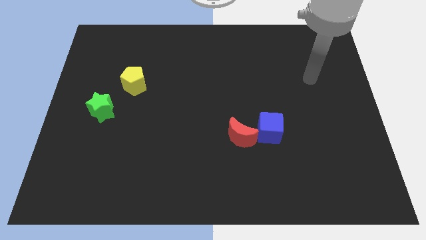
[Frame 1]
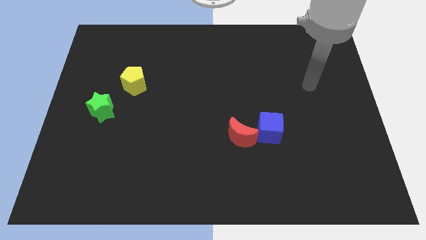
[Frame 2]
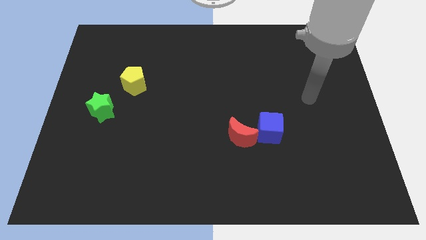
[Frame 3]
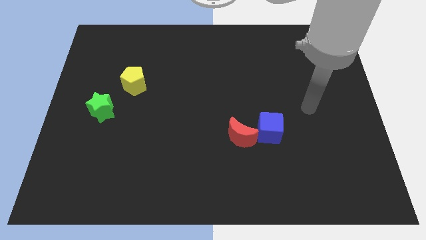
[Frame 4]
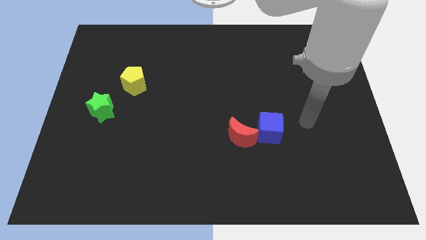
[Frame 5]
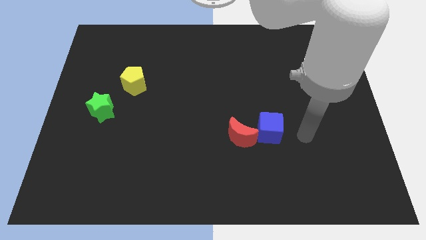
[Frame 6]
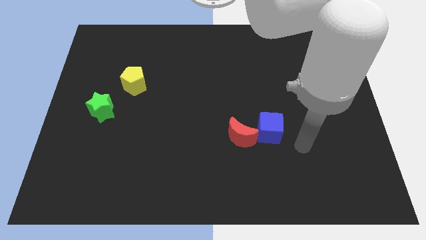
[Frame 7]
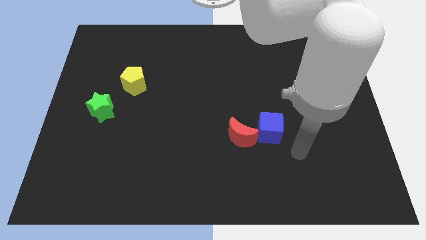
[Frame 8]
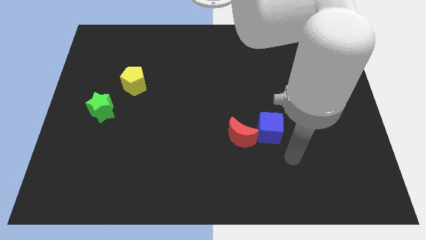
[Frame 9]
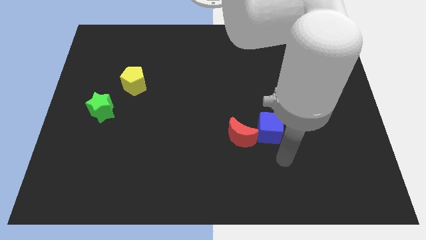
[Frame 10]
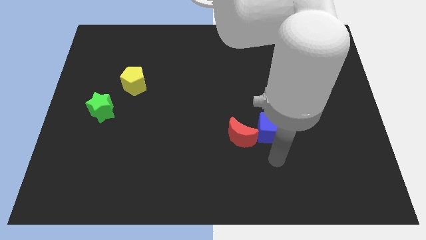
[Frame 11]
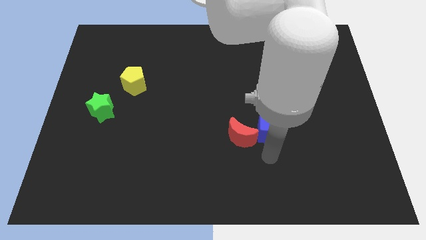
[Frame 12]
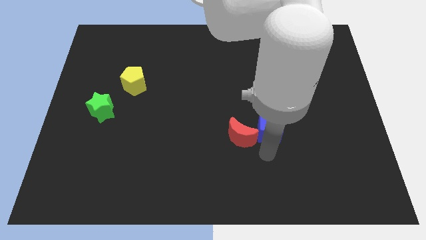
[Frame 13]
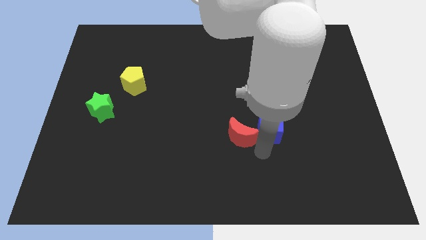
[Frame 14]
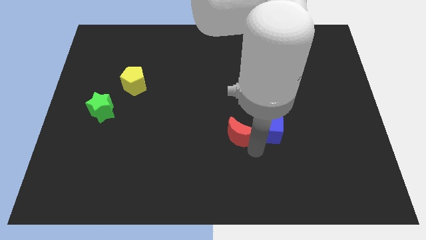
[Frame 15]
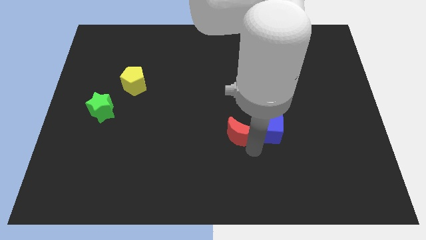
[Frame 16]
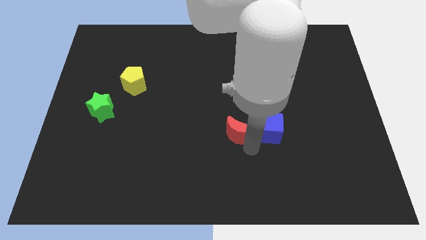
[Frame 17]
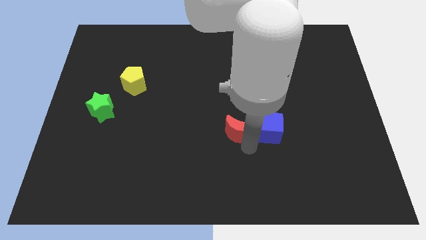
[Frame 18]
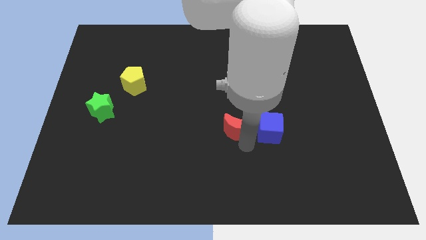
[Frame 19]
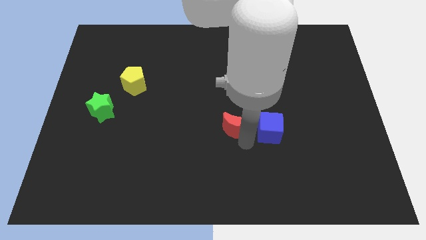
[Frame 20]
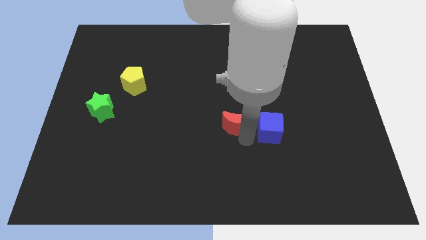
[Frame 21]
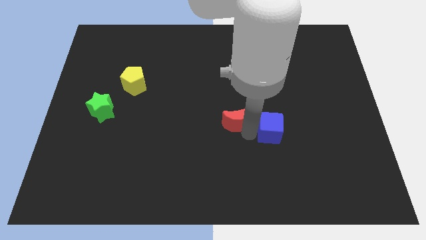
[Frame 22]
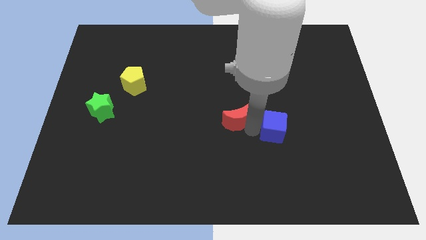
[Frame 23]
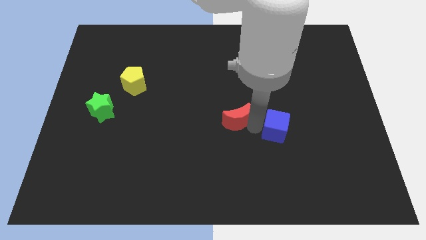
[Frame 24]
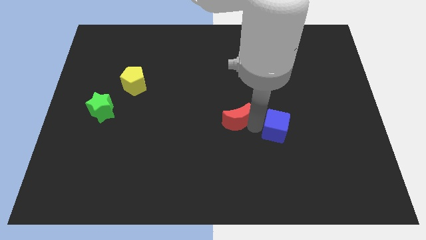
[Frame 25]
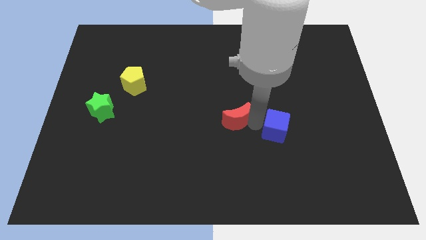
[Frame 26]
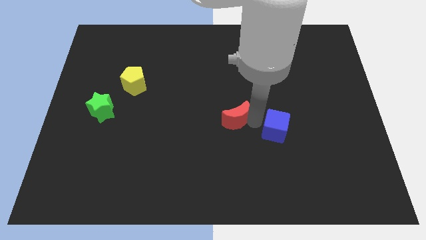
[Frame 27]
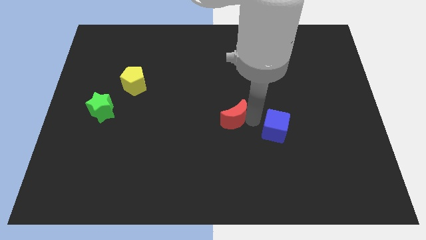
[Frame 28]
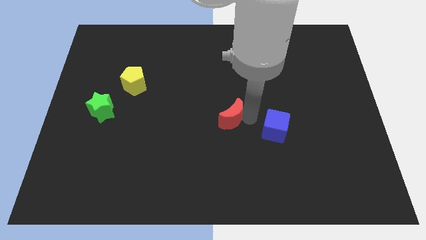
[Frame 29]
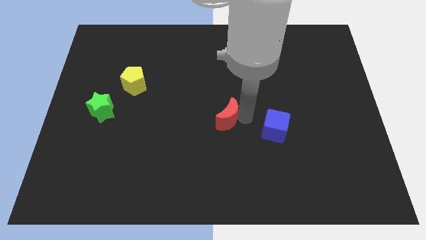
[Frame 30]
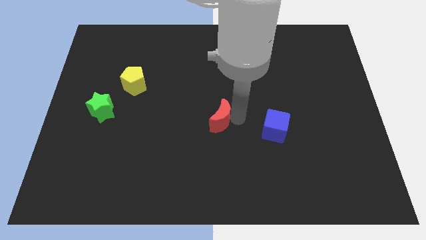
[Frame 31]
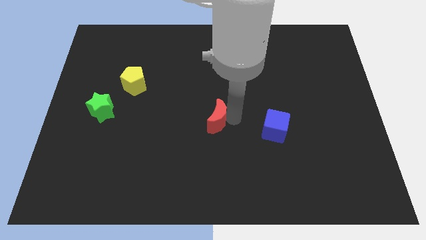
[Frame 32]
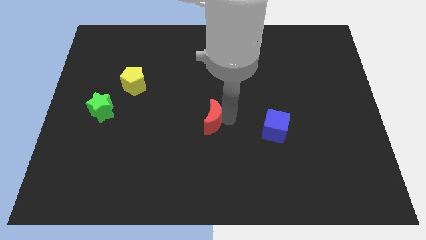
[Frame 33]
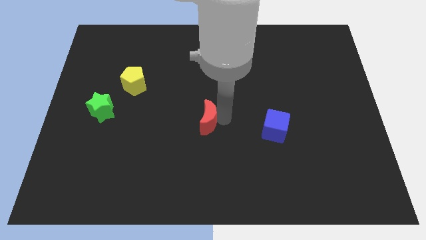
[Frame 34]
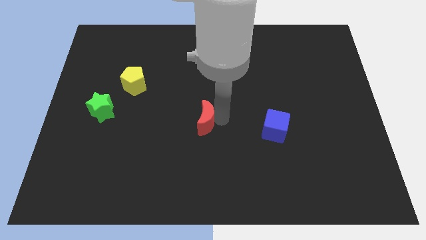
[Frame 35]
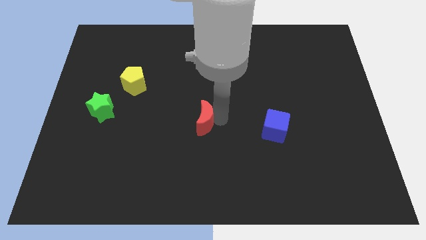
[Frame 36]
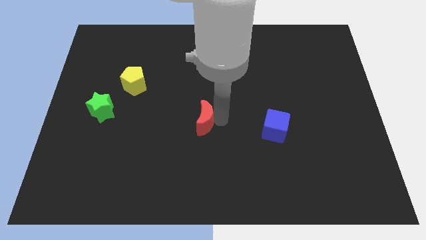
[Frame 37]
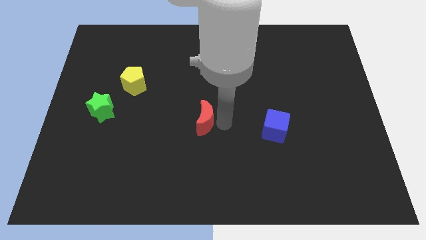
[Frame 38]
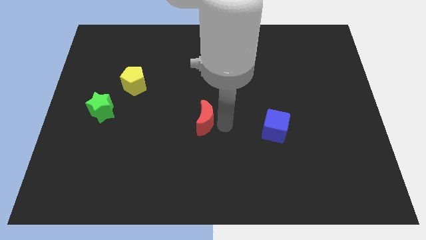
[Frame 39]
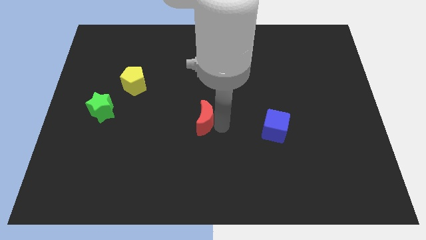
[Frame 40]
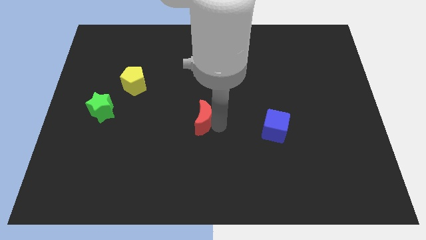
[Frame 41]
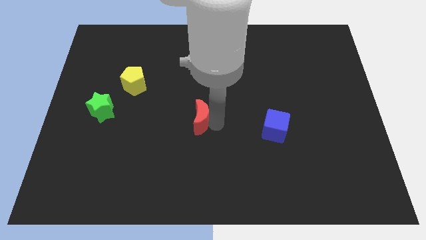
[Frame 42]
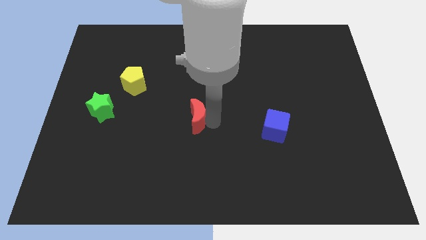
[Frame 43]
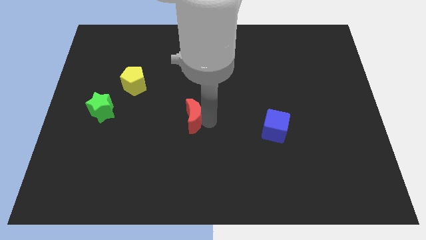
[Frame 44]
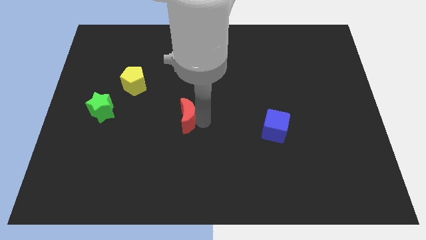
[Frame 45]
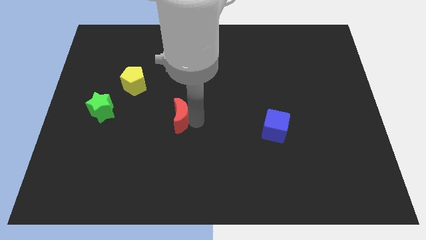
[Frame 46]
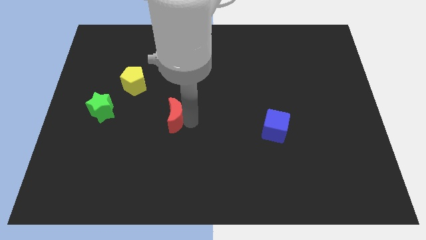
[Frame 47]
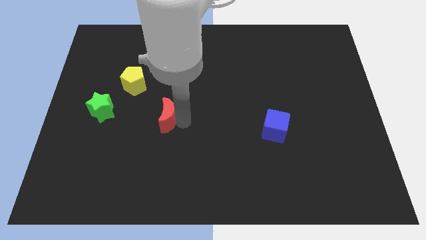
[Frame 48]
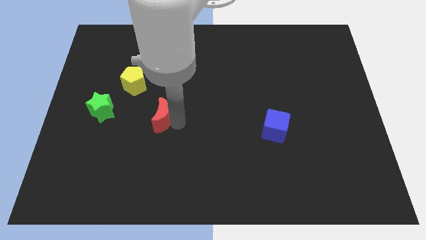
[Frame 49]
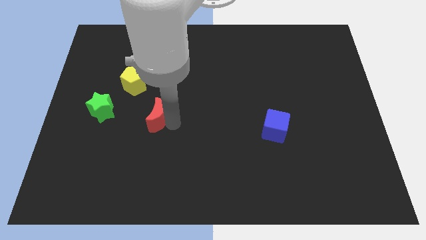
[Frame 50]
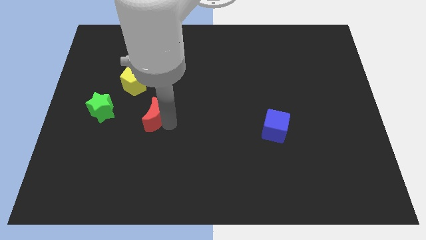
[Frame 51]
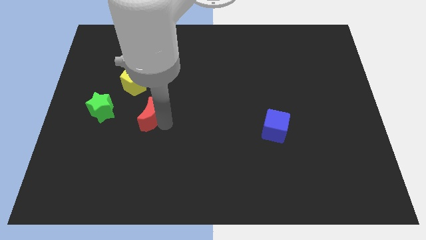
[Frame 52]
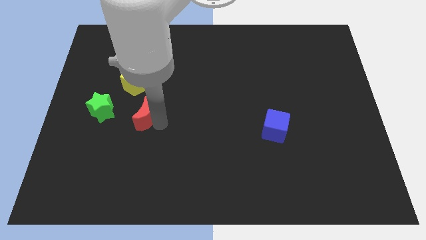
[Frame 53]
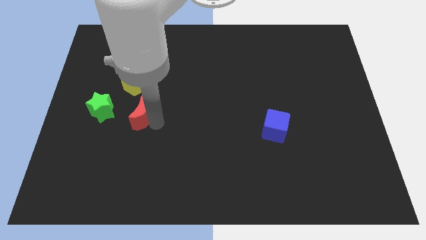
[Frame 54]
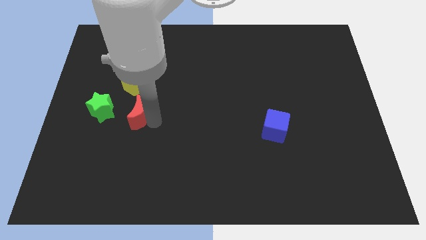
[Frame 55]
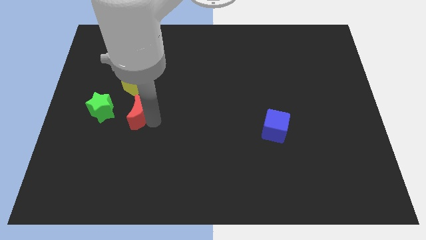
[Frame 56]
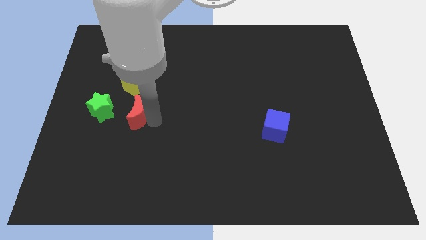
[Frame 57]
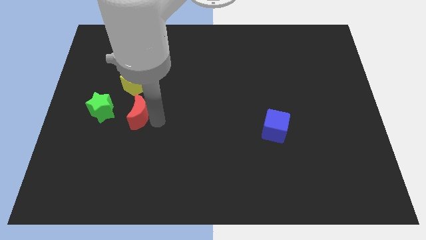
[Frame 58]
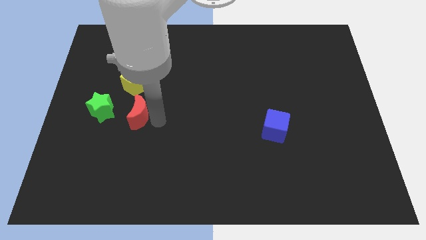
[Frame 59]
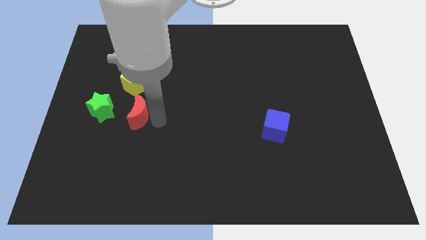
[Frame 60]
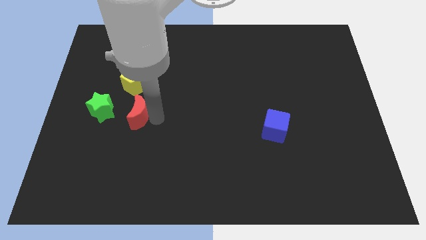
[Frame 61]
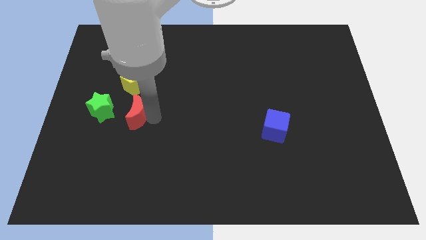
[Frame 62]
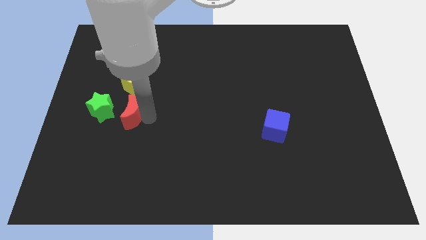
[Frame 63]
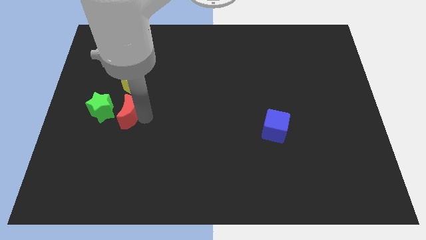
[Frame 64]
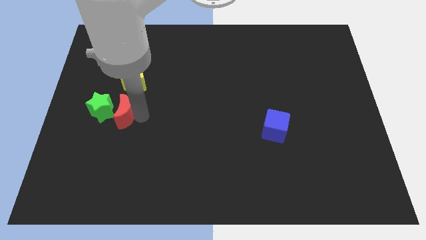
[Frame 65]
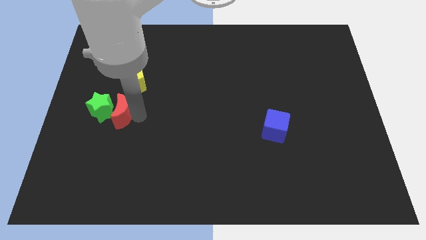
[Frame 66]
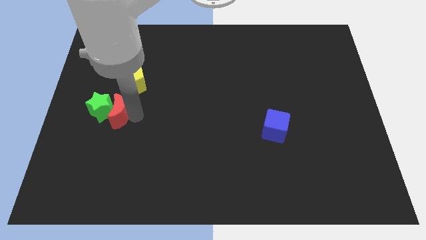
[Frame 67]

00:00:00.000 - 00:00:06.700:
put the red moon to the green star

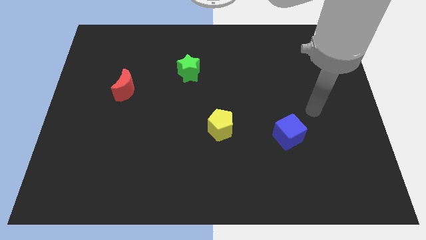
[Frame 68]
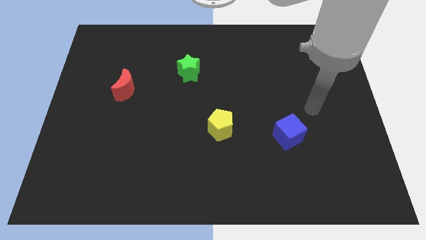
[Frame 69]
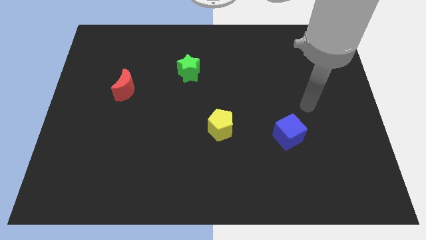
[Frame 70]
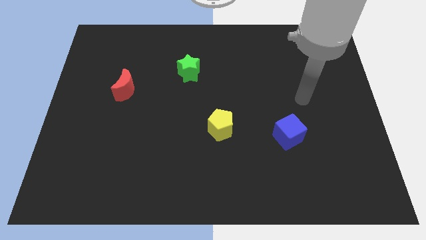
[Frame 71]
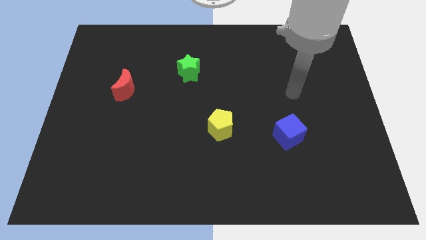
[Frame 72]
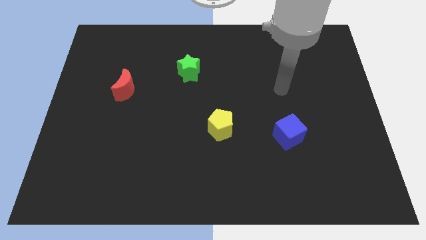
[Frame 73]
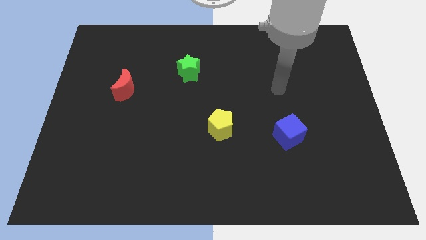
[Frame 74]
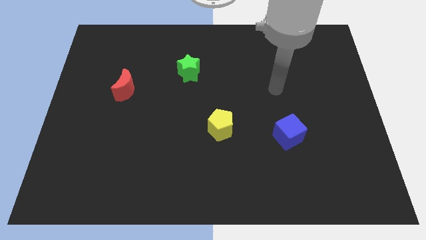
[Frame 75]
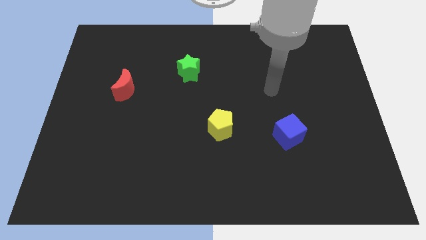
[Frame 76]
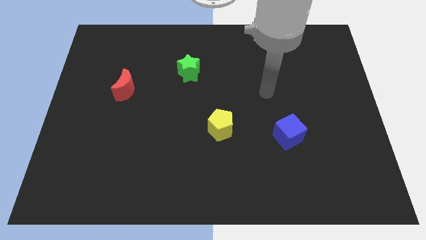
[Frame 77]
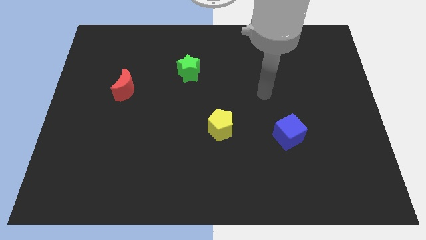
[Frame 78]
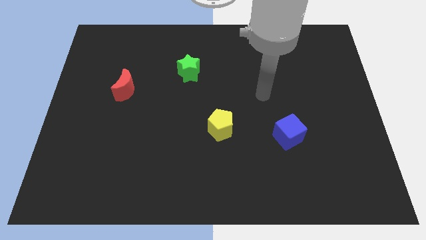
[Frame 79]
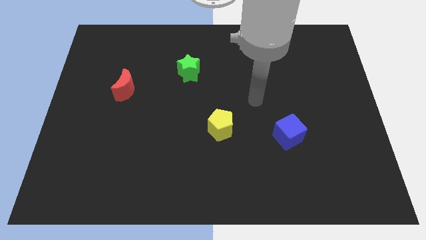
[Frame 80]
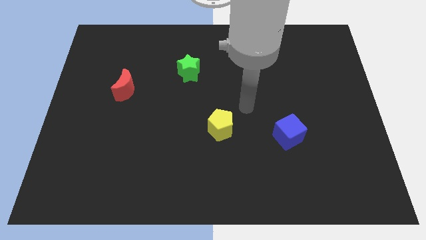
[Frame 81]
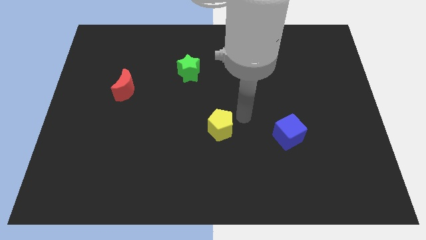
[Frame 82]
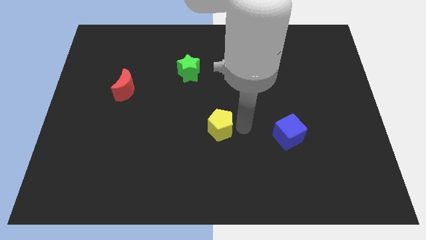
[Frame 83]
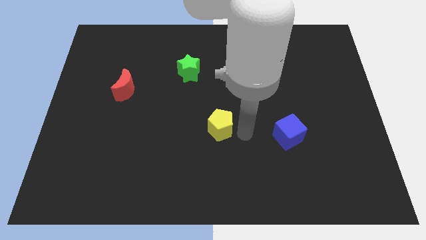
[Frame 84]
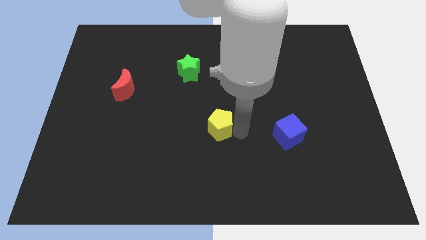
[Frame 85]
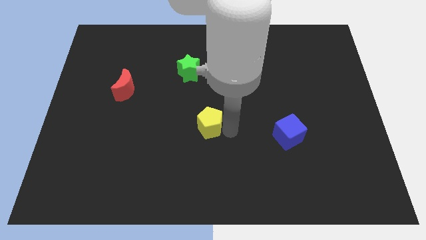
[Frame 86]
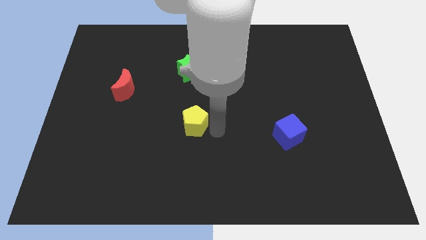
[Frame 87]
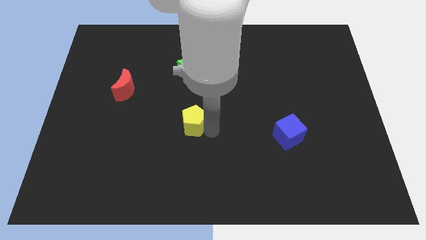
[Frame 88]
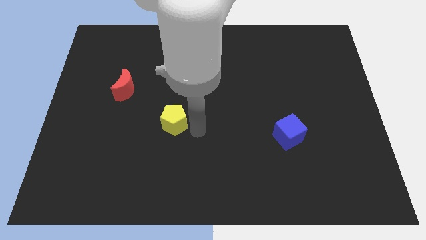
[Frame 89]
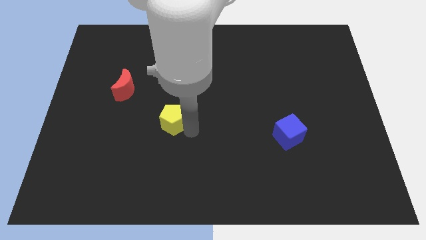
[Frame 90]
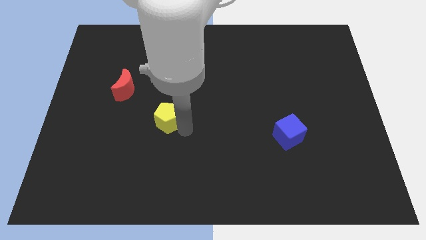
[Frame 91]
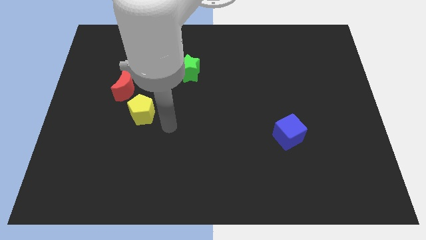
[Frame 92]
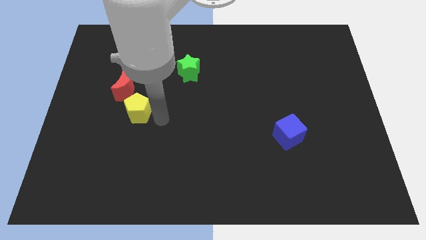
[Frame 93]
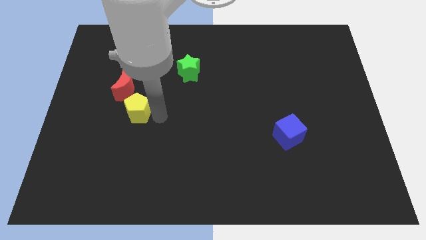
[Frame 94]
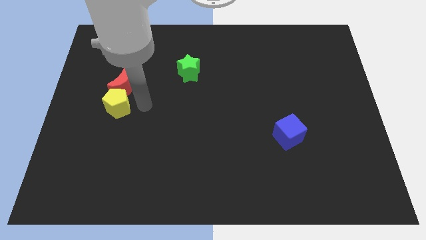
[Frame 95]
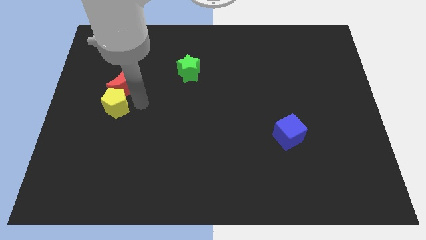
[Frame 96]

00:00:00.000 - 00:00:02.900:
put the yellow pentagon towards the moon
